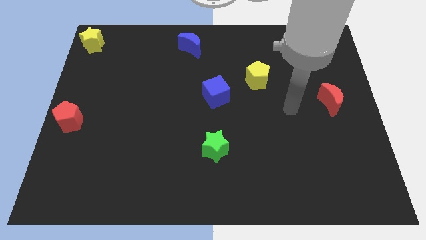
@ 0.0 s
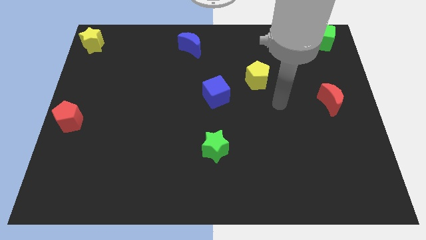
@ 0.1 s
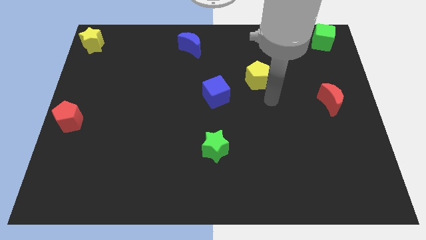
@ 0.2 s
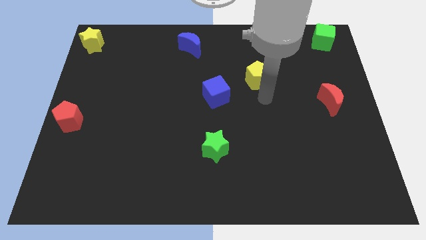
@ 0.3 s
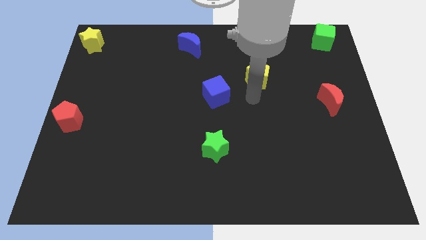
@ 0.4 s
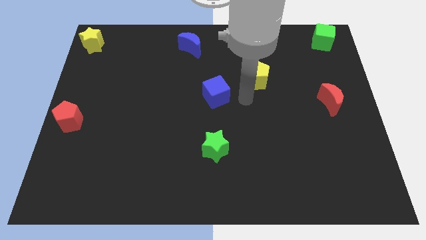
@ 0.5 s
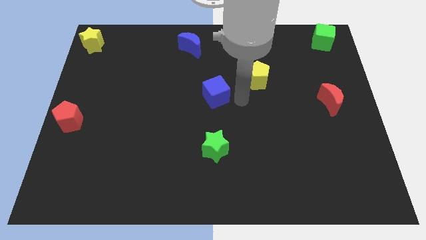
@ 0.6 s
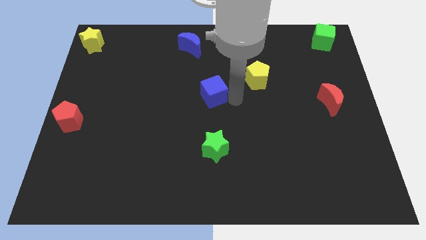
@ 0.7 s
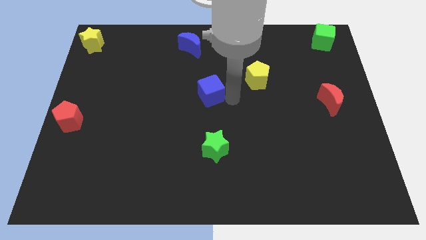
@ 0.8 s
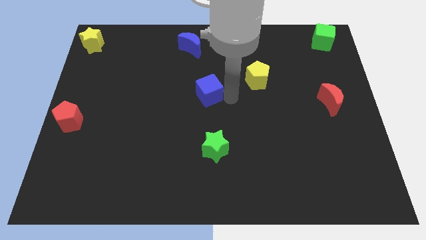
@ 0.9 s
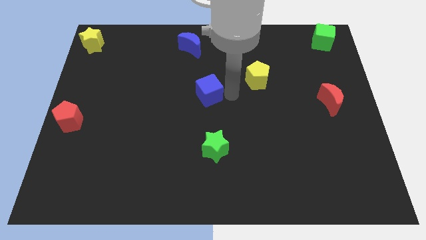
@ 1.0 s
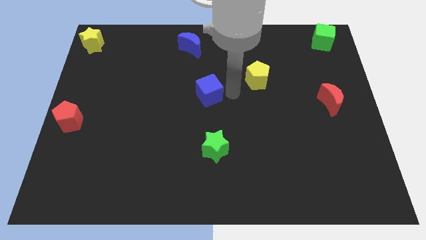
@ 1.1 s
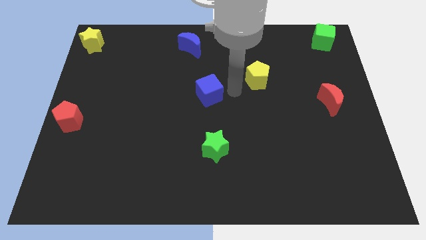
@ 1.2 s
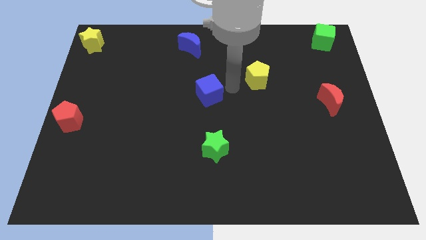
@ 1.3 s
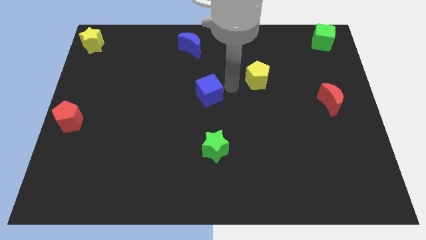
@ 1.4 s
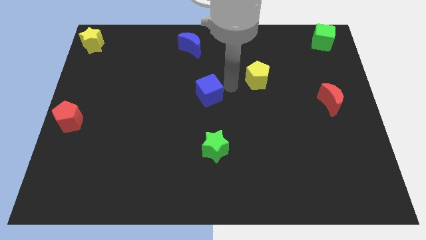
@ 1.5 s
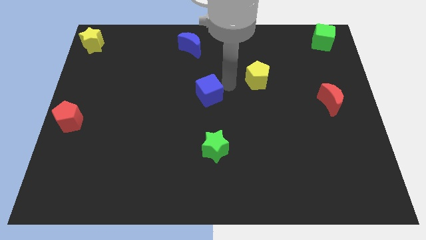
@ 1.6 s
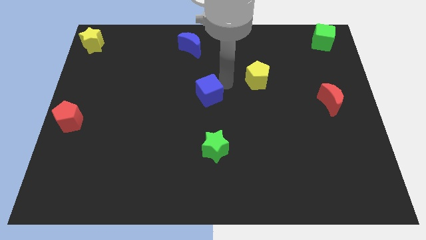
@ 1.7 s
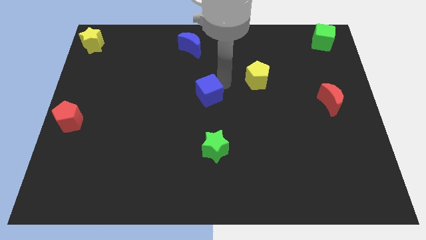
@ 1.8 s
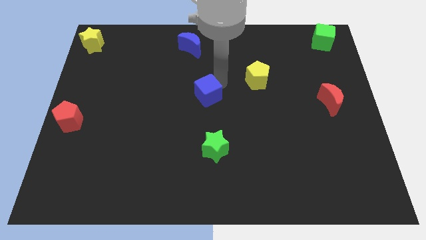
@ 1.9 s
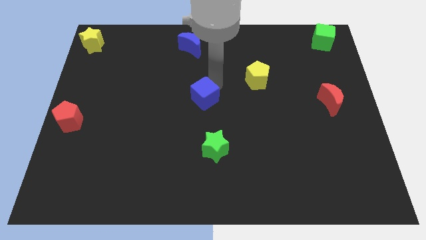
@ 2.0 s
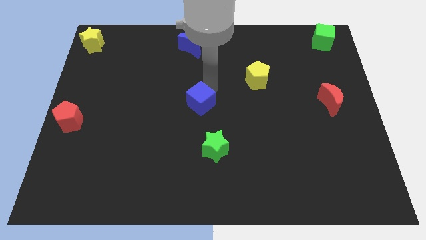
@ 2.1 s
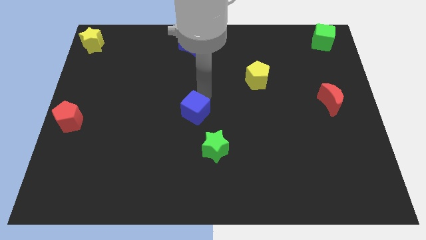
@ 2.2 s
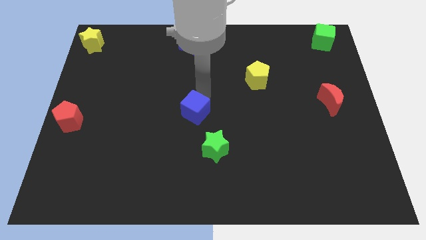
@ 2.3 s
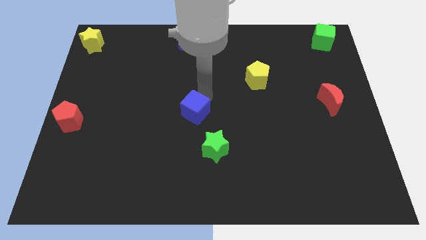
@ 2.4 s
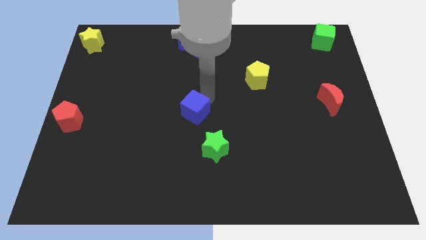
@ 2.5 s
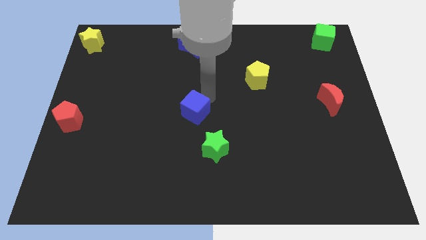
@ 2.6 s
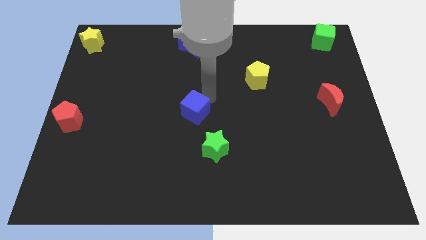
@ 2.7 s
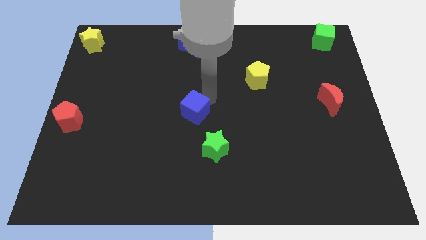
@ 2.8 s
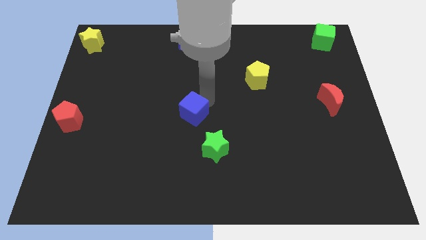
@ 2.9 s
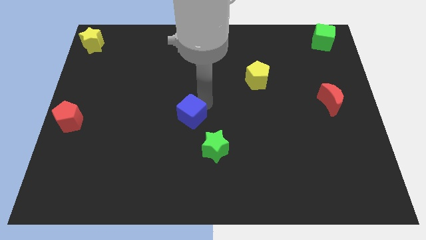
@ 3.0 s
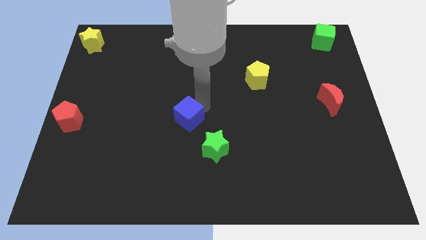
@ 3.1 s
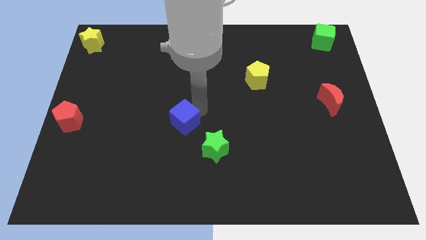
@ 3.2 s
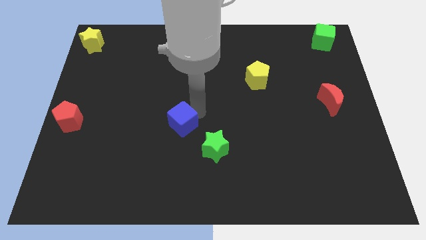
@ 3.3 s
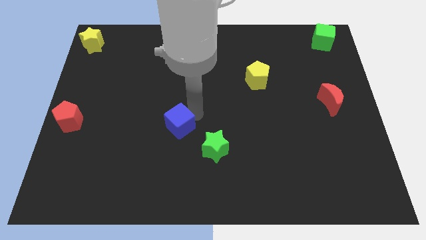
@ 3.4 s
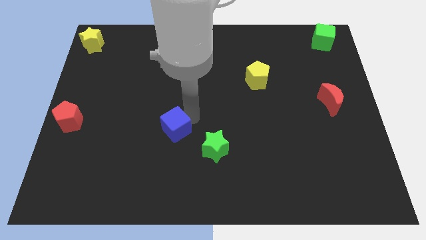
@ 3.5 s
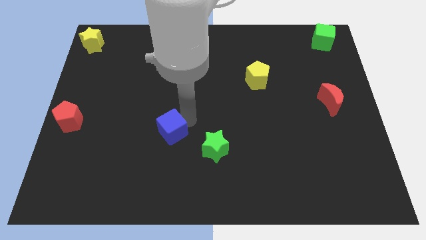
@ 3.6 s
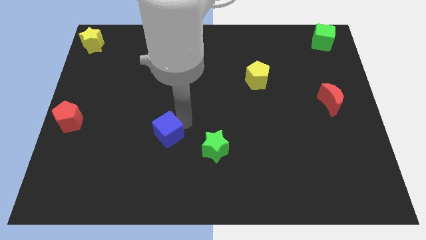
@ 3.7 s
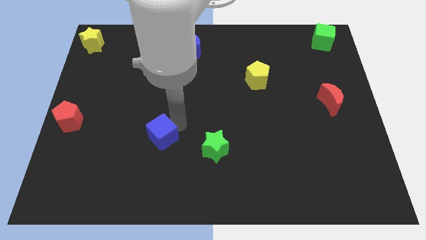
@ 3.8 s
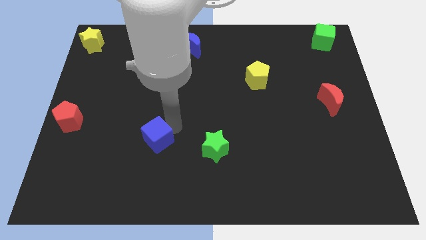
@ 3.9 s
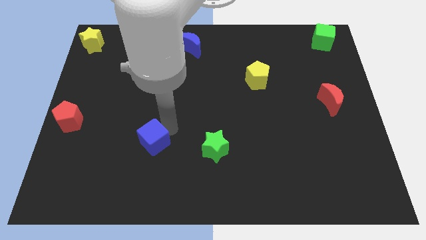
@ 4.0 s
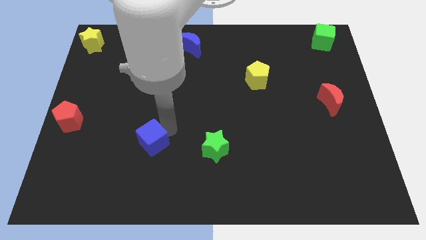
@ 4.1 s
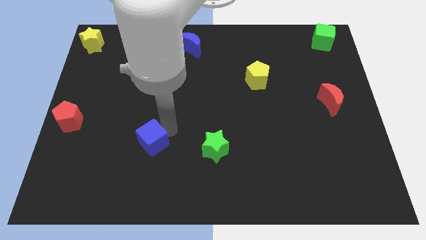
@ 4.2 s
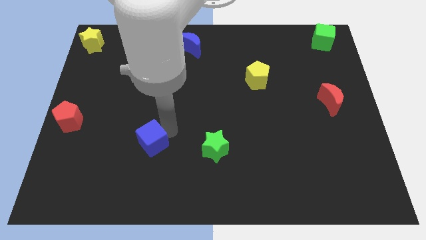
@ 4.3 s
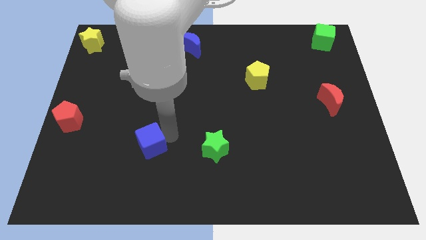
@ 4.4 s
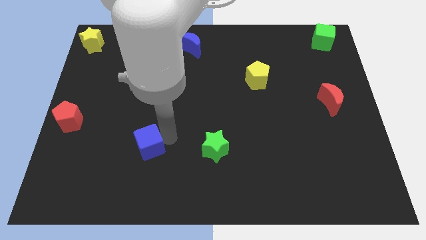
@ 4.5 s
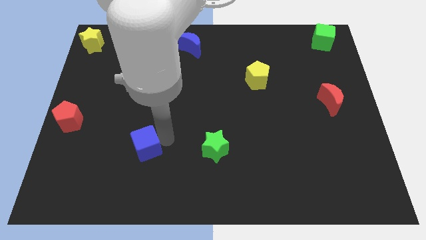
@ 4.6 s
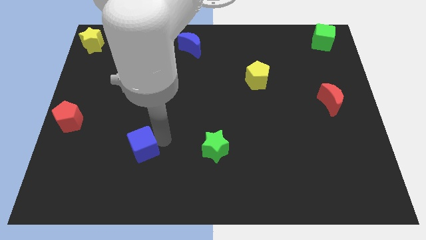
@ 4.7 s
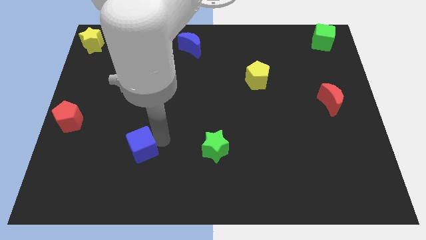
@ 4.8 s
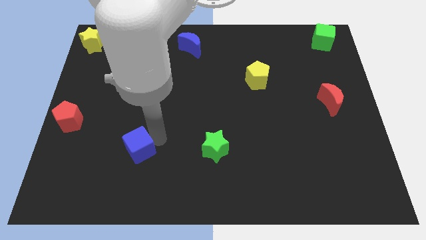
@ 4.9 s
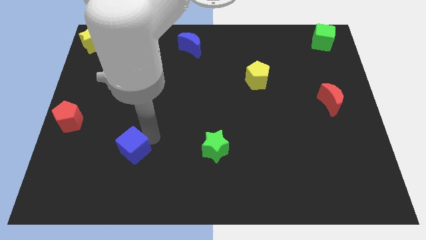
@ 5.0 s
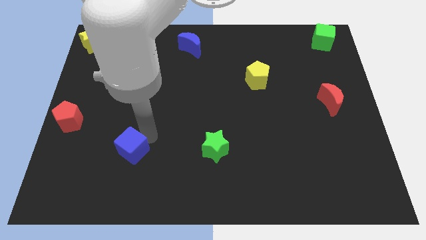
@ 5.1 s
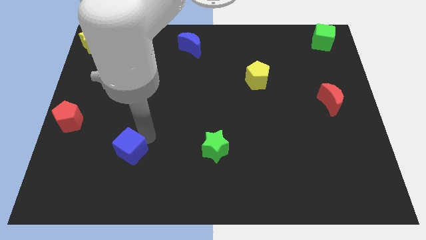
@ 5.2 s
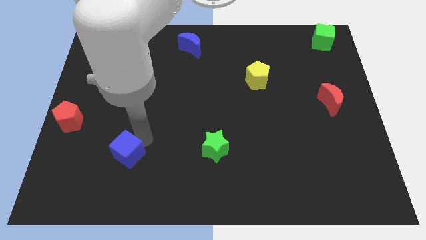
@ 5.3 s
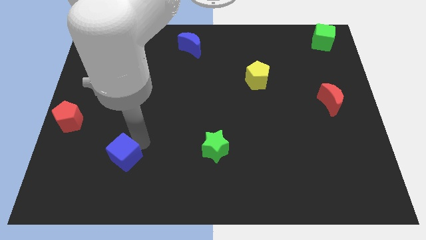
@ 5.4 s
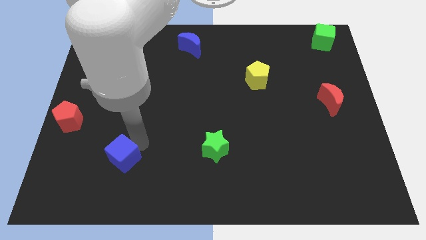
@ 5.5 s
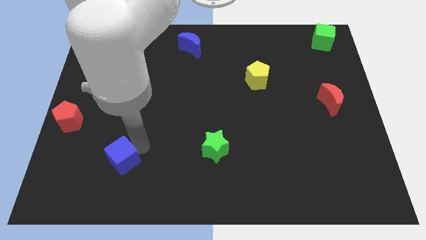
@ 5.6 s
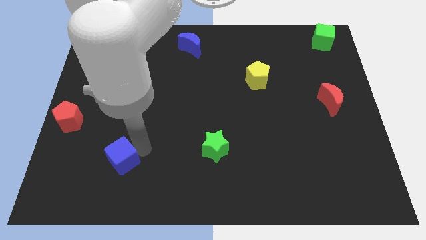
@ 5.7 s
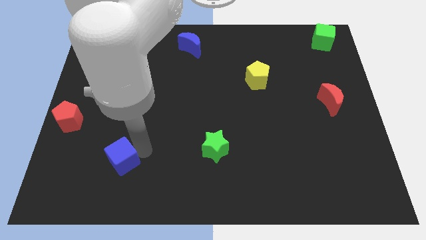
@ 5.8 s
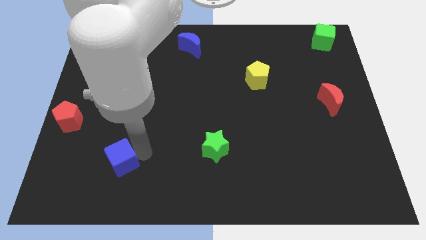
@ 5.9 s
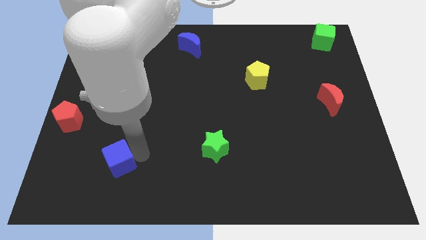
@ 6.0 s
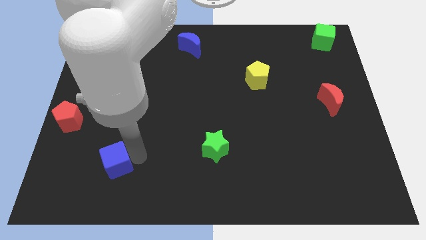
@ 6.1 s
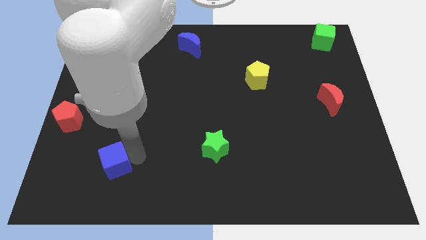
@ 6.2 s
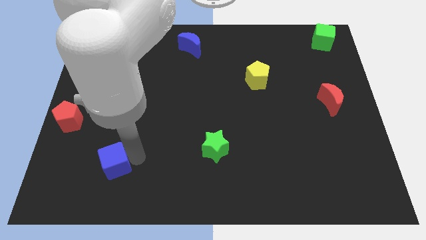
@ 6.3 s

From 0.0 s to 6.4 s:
push the blue cube to the bottom of the board

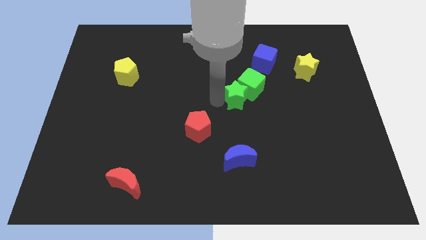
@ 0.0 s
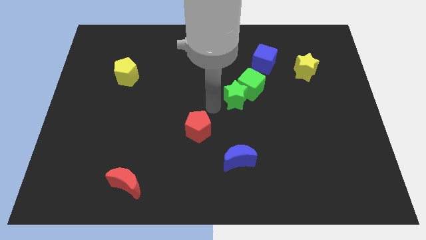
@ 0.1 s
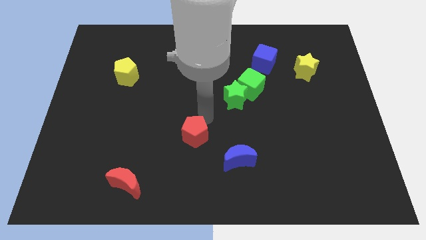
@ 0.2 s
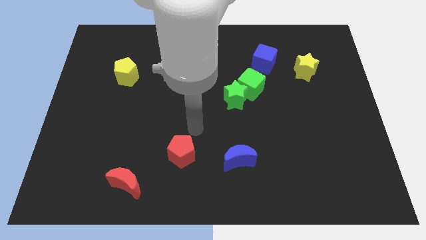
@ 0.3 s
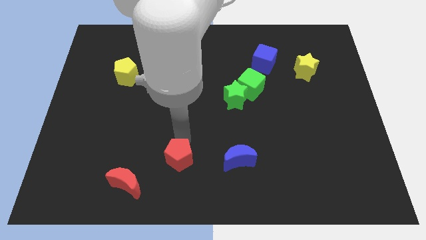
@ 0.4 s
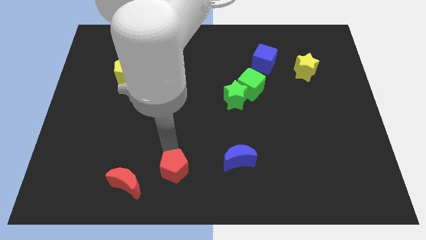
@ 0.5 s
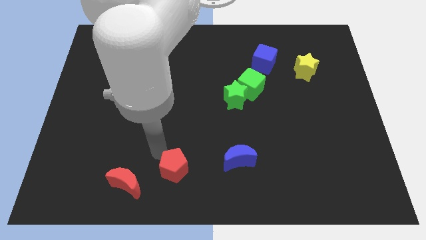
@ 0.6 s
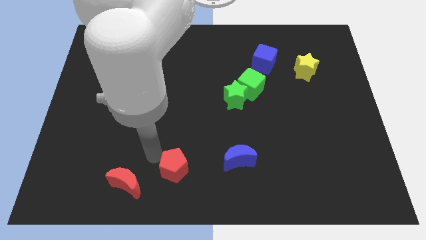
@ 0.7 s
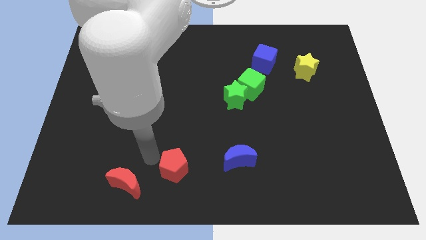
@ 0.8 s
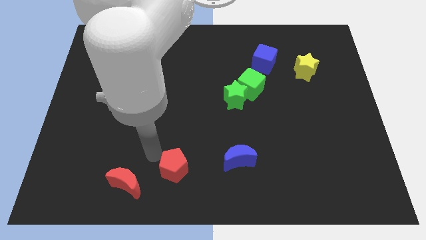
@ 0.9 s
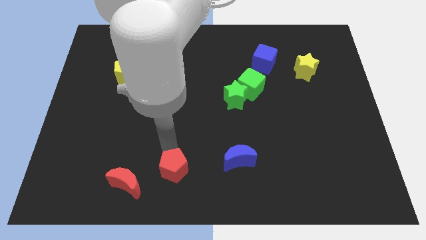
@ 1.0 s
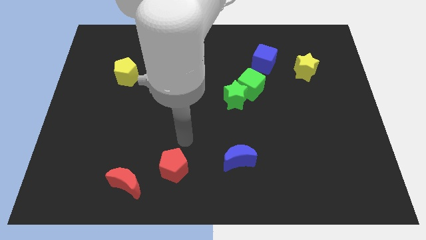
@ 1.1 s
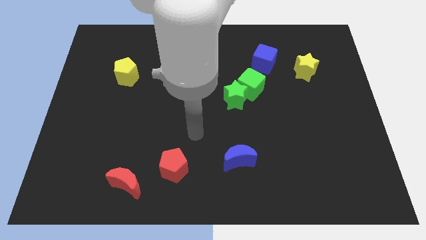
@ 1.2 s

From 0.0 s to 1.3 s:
push the red pentagon to the left of the blue crescent

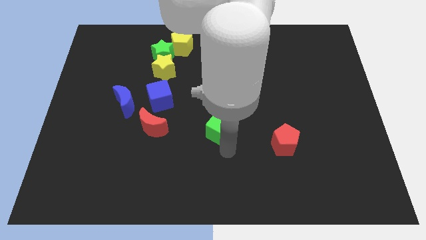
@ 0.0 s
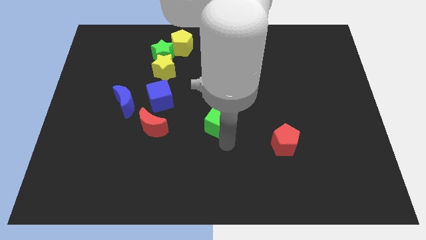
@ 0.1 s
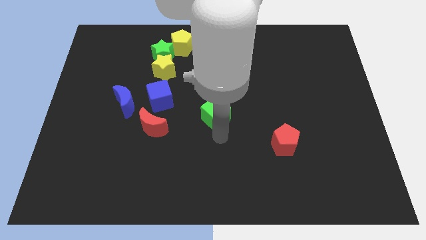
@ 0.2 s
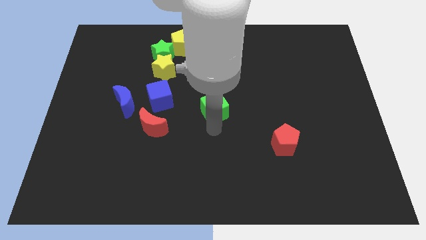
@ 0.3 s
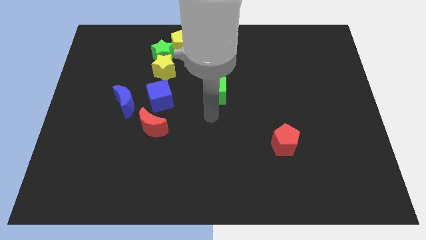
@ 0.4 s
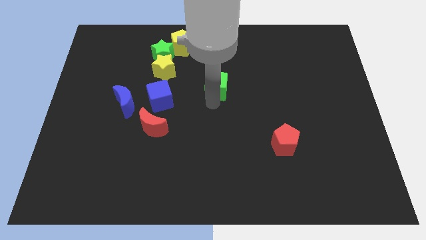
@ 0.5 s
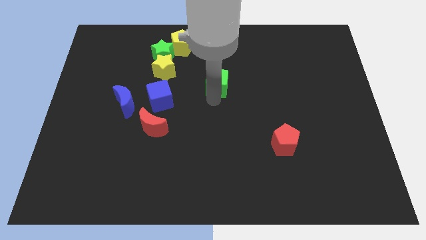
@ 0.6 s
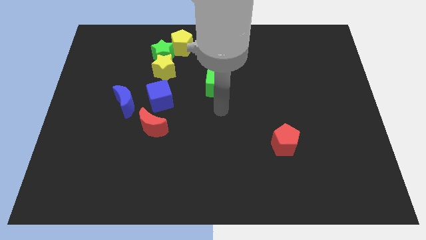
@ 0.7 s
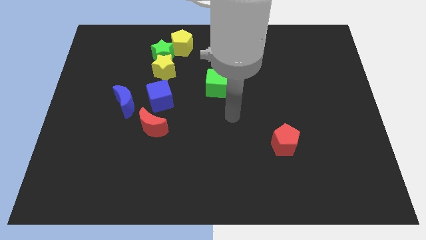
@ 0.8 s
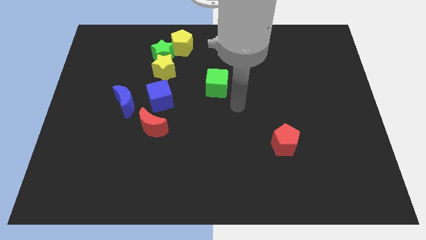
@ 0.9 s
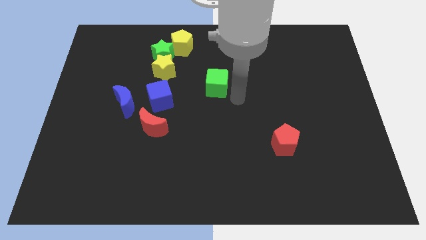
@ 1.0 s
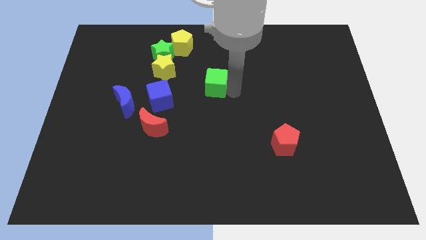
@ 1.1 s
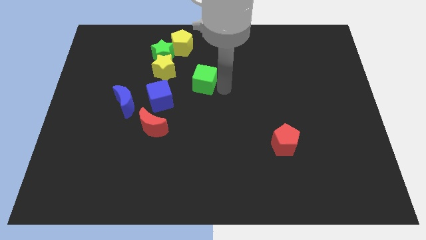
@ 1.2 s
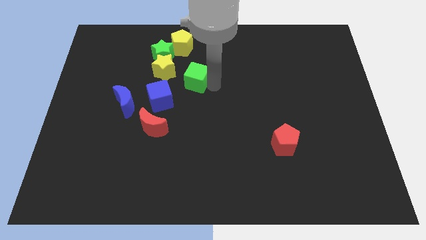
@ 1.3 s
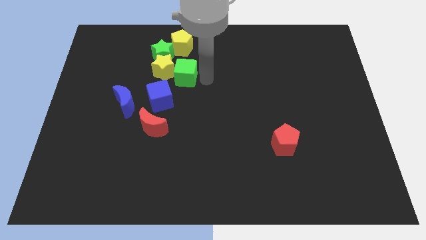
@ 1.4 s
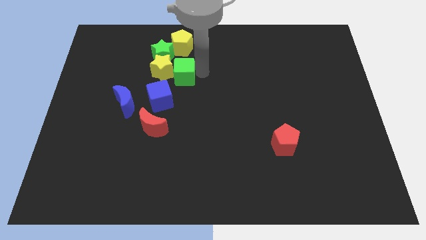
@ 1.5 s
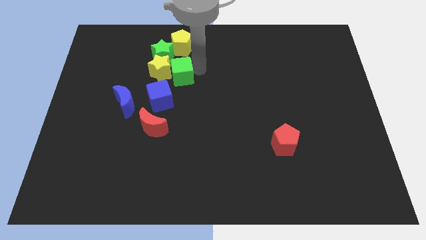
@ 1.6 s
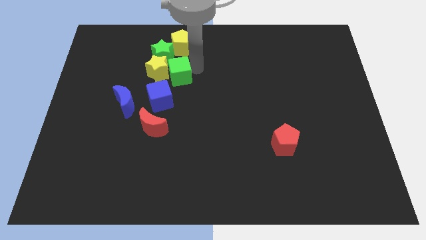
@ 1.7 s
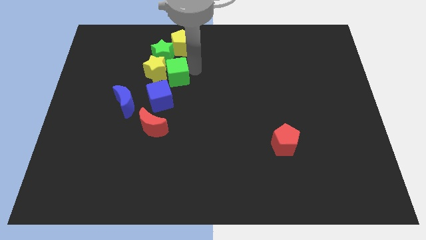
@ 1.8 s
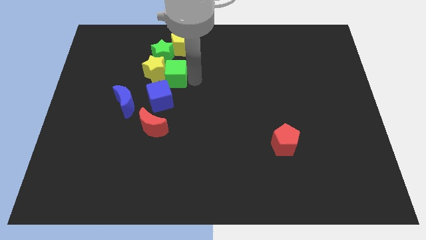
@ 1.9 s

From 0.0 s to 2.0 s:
place the green cube to right side of yellow star
